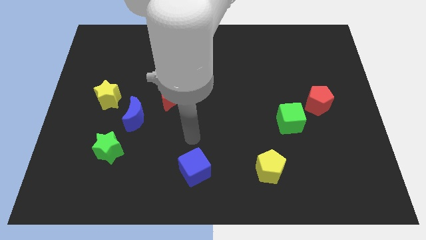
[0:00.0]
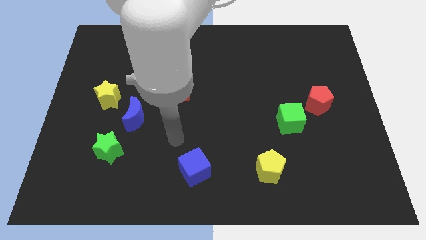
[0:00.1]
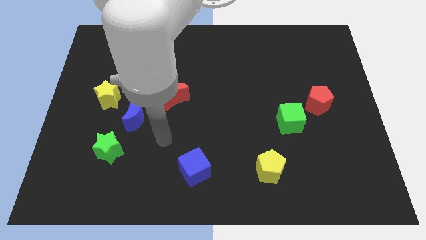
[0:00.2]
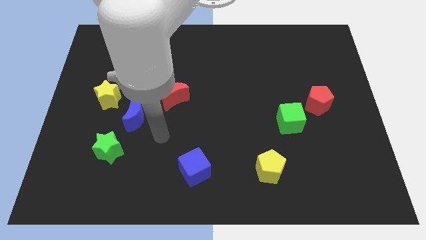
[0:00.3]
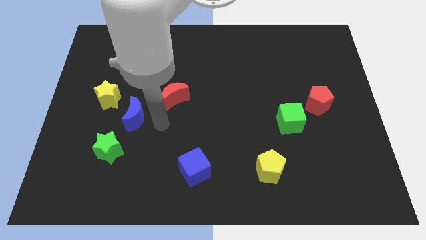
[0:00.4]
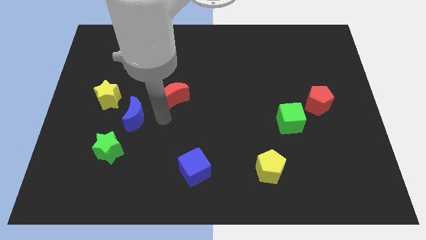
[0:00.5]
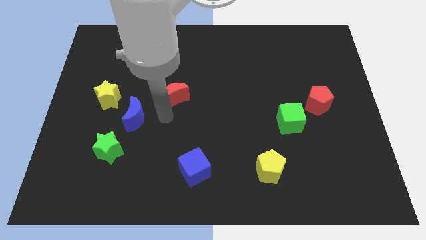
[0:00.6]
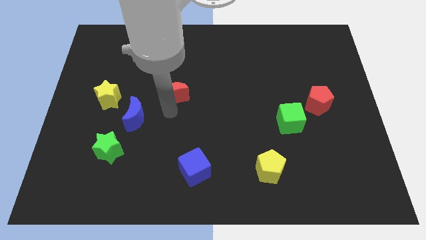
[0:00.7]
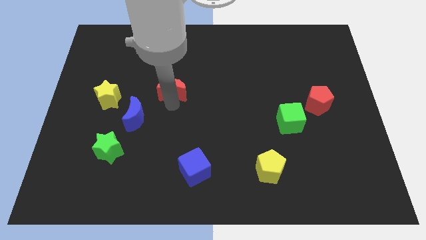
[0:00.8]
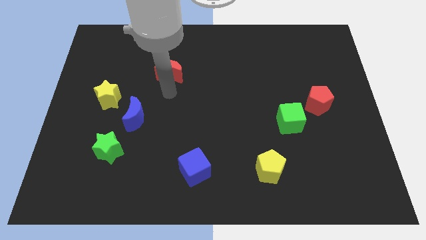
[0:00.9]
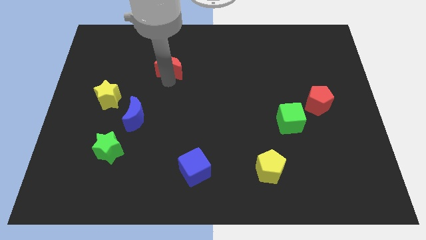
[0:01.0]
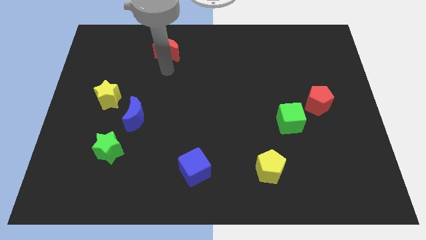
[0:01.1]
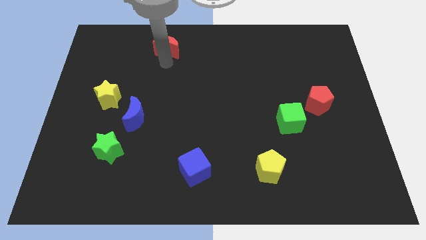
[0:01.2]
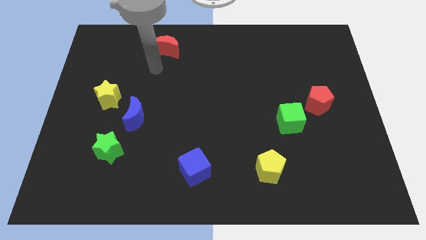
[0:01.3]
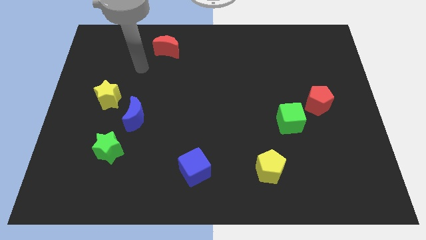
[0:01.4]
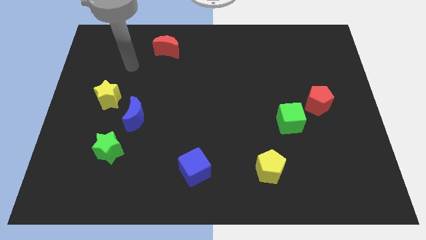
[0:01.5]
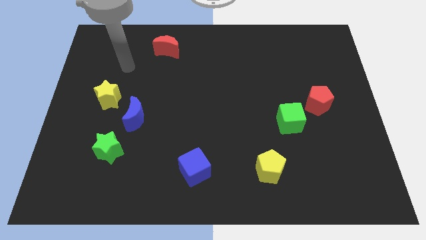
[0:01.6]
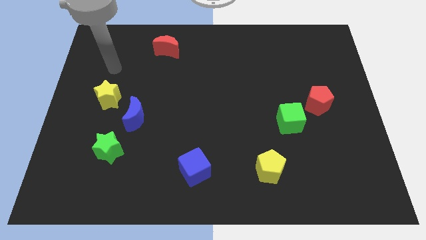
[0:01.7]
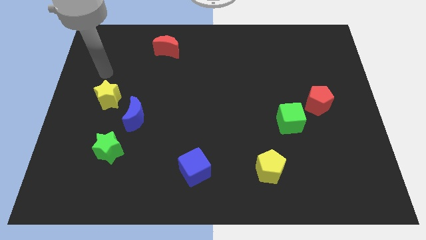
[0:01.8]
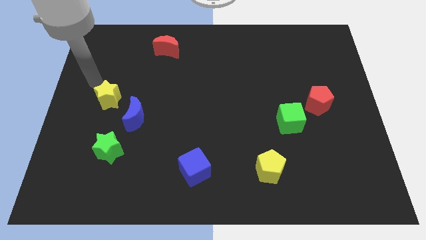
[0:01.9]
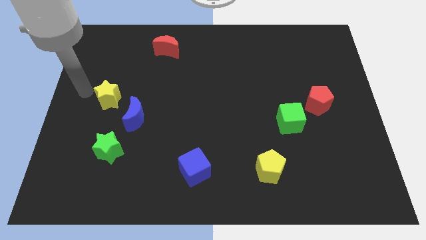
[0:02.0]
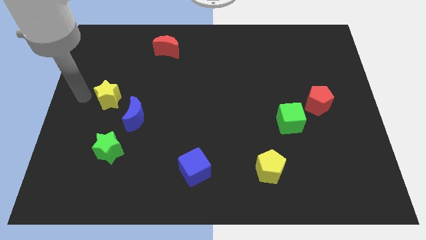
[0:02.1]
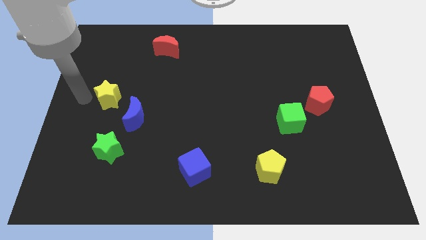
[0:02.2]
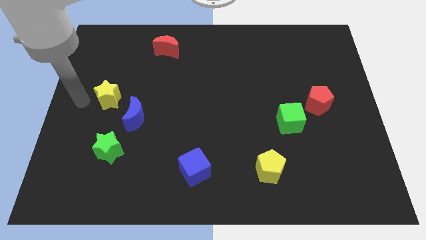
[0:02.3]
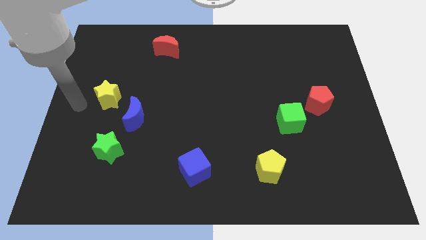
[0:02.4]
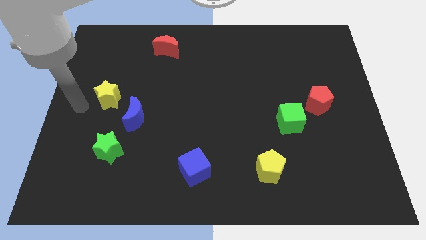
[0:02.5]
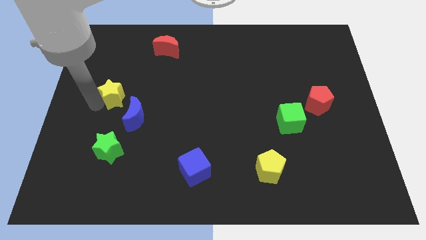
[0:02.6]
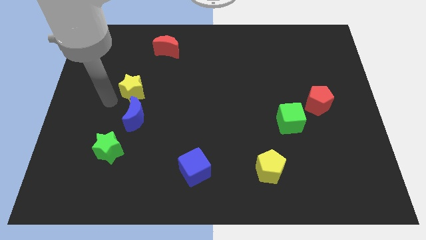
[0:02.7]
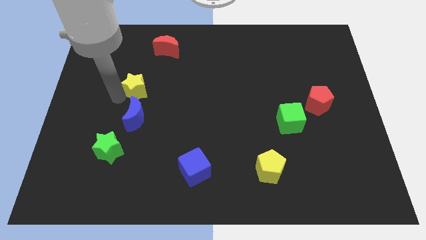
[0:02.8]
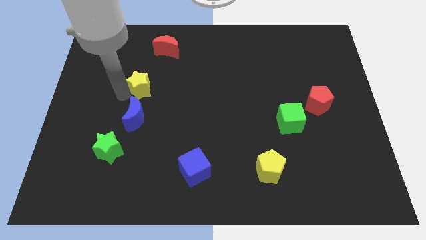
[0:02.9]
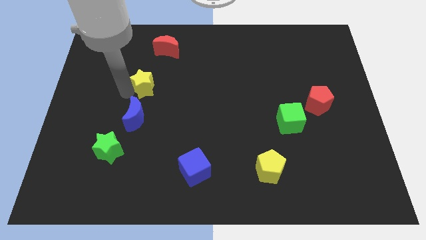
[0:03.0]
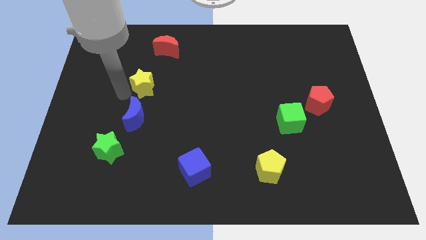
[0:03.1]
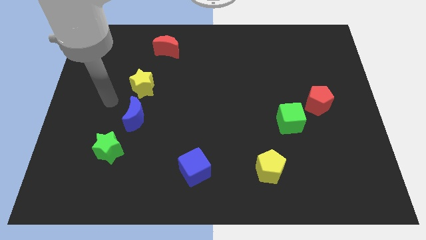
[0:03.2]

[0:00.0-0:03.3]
push the red moon and yellow star above blue moon

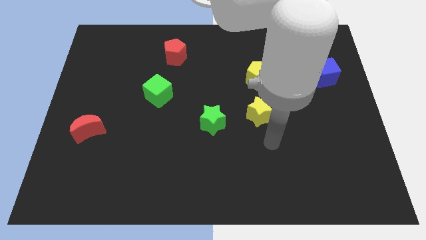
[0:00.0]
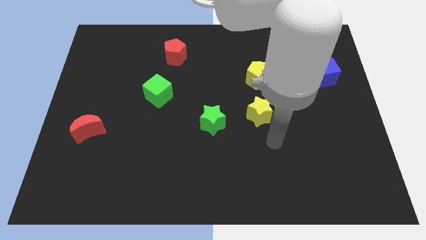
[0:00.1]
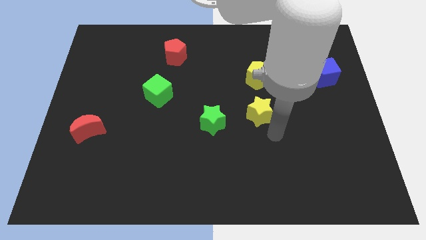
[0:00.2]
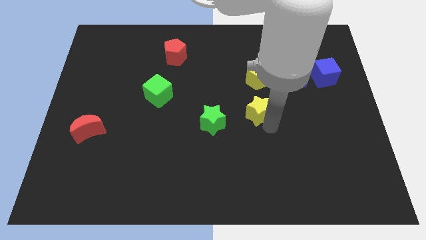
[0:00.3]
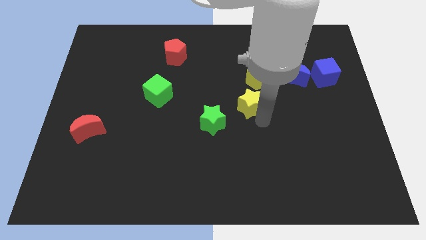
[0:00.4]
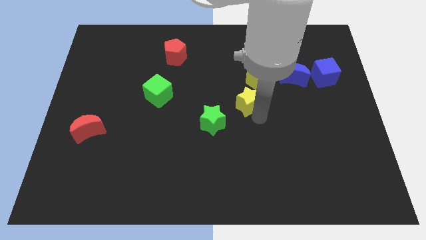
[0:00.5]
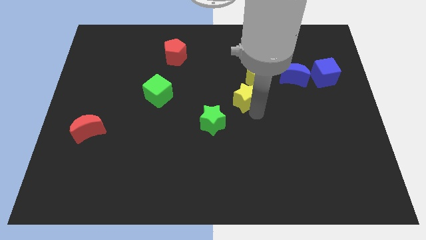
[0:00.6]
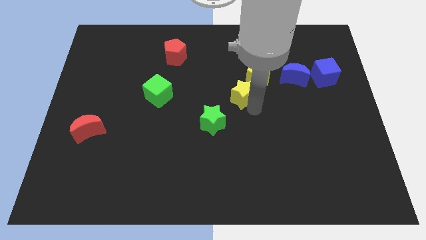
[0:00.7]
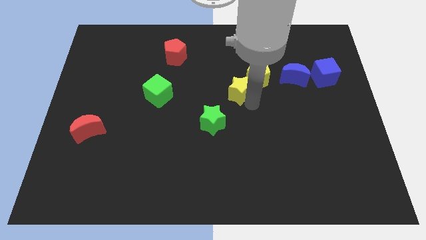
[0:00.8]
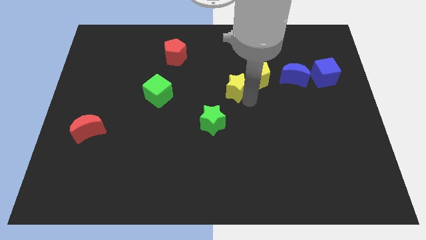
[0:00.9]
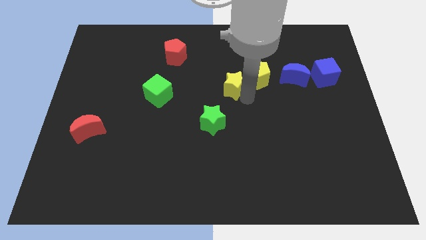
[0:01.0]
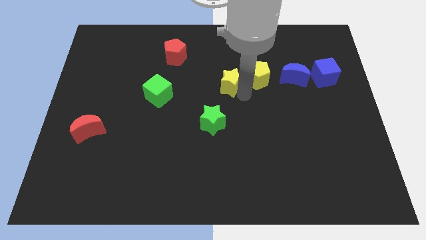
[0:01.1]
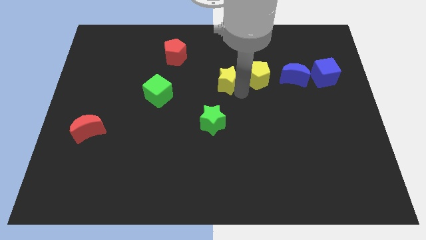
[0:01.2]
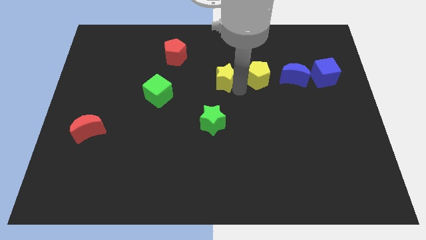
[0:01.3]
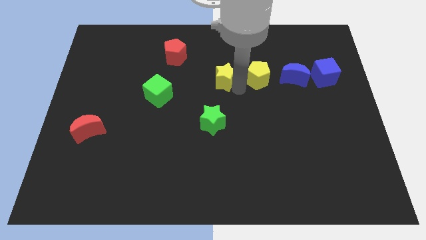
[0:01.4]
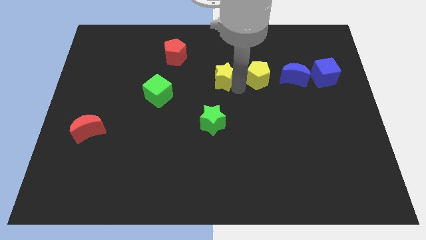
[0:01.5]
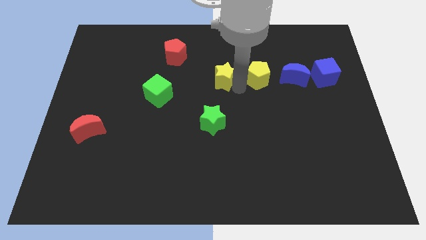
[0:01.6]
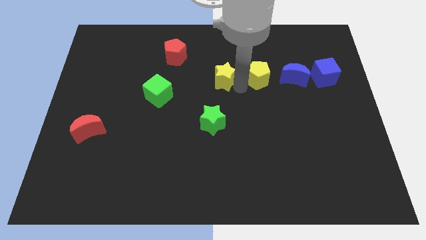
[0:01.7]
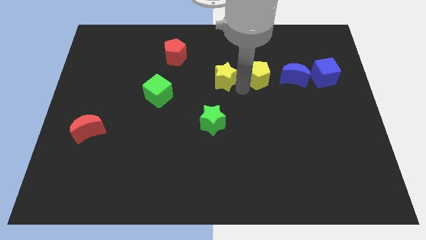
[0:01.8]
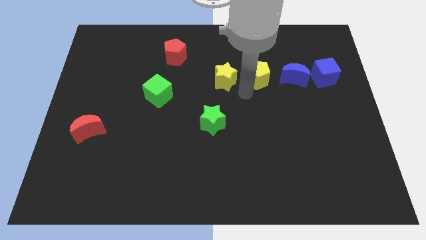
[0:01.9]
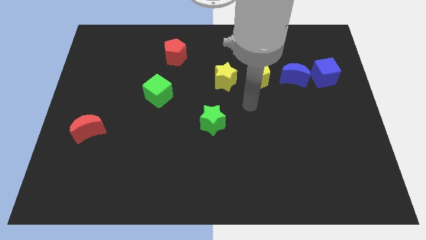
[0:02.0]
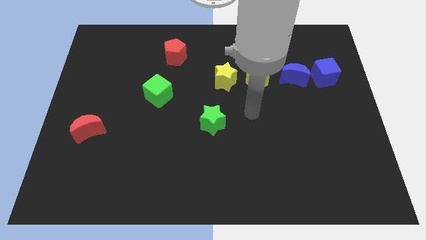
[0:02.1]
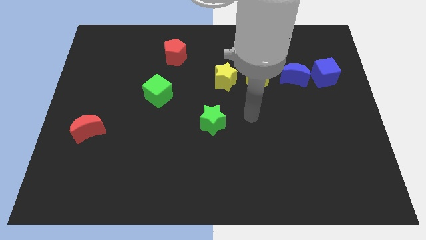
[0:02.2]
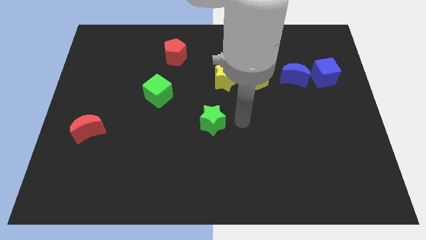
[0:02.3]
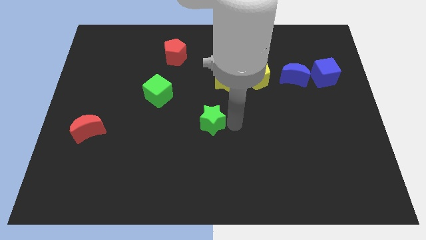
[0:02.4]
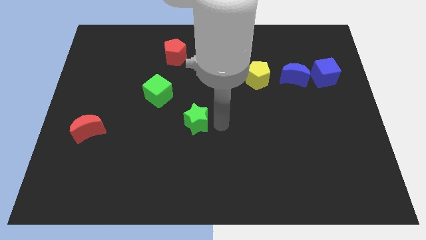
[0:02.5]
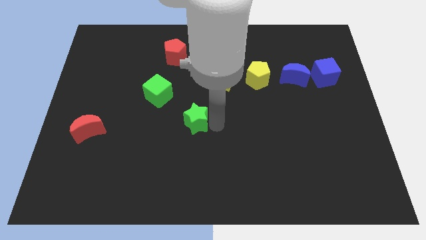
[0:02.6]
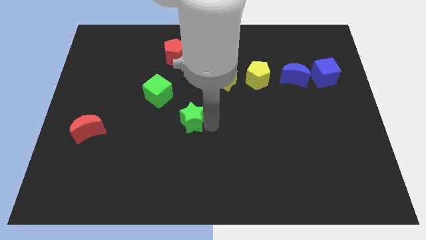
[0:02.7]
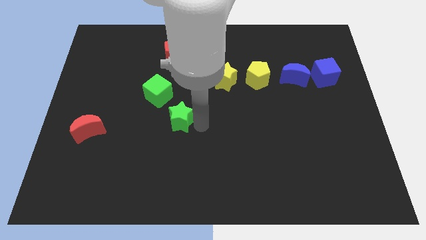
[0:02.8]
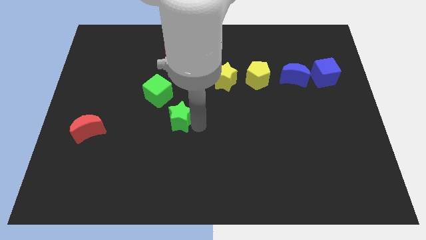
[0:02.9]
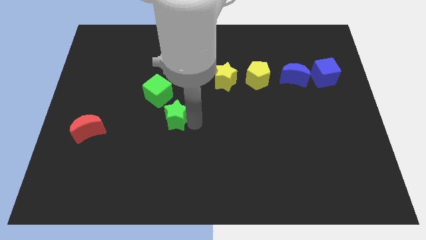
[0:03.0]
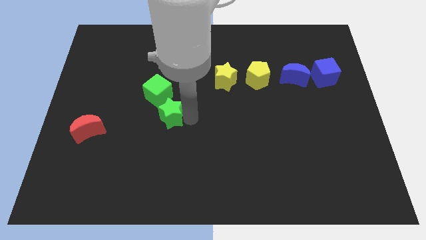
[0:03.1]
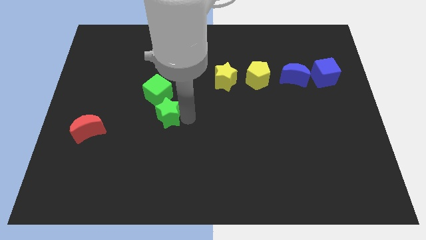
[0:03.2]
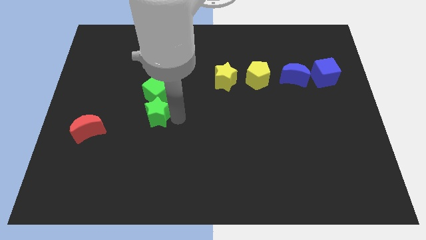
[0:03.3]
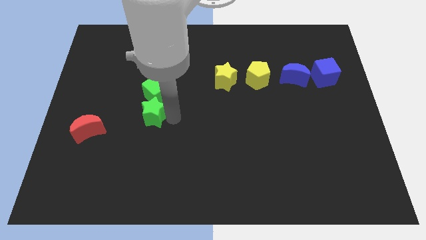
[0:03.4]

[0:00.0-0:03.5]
push green star below green cube

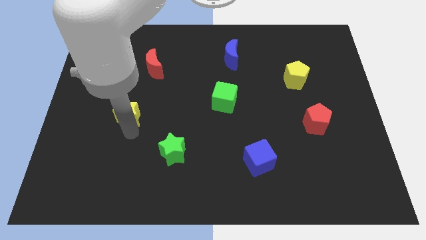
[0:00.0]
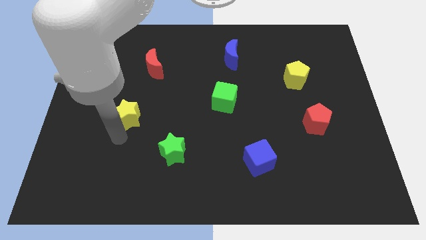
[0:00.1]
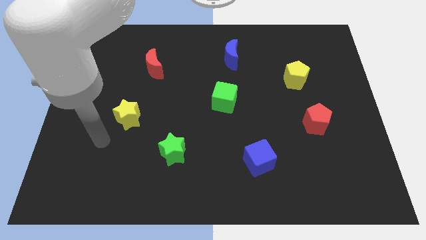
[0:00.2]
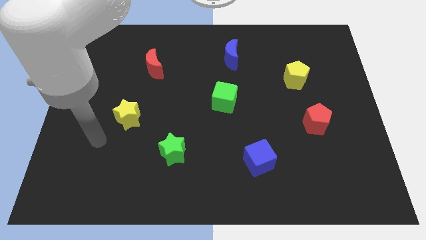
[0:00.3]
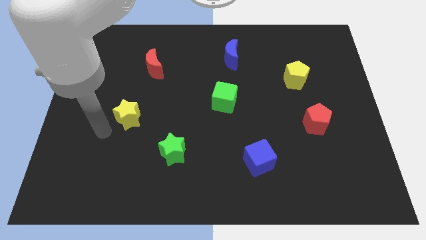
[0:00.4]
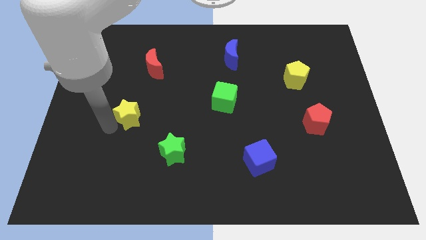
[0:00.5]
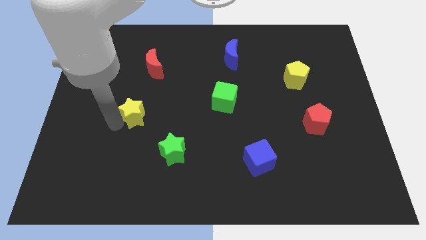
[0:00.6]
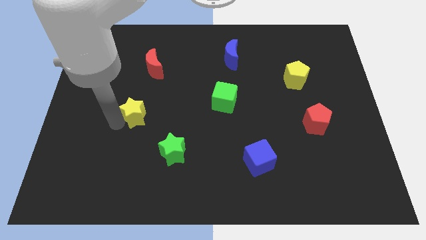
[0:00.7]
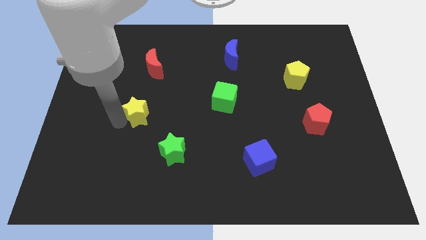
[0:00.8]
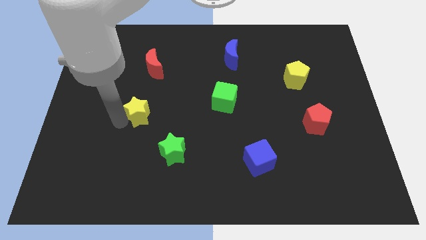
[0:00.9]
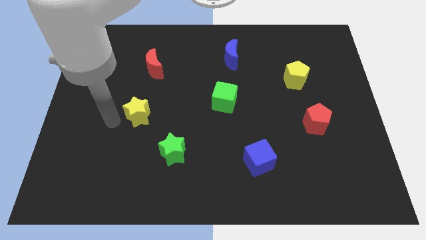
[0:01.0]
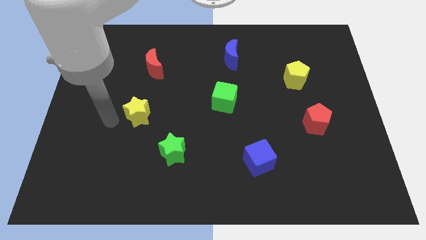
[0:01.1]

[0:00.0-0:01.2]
put your arm on the left side of the yellow star

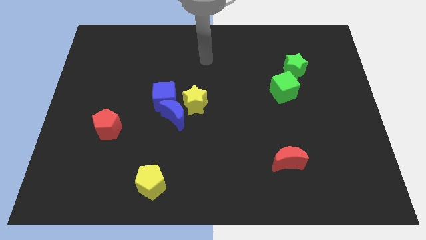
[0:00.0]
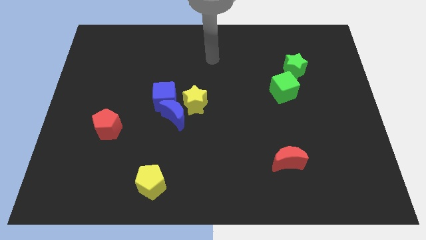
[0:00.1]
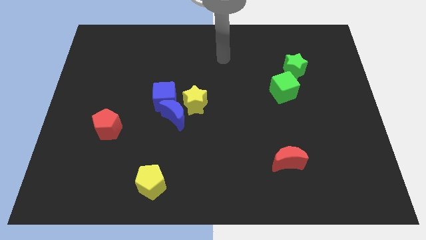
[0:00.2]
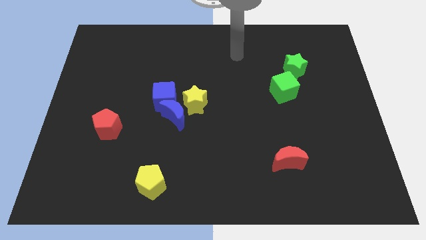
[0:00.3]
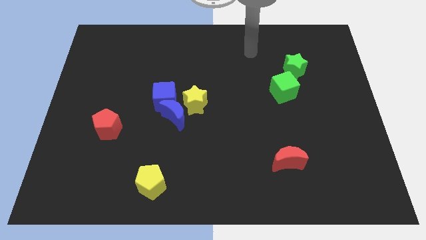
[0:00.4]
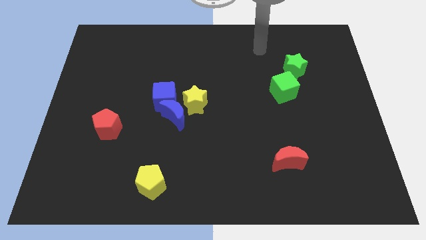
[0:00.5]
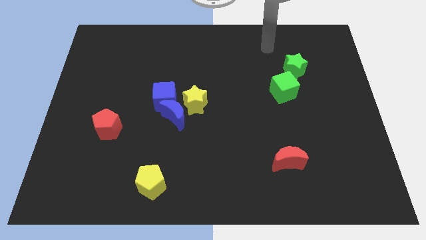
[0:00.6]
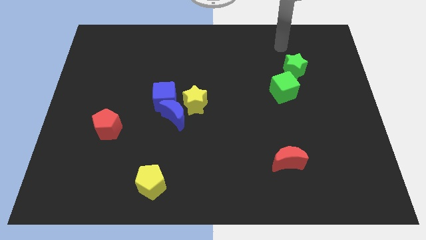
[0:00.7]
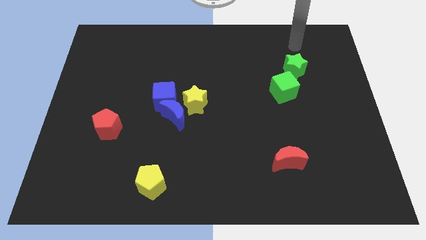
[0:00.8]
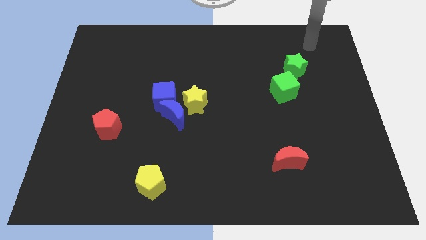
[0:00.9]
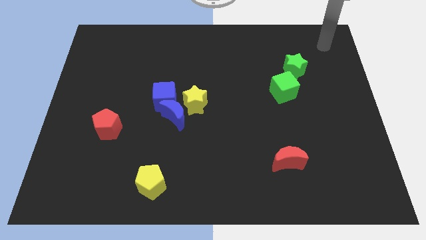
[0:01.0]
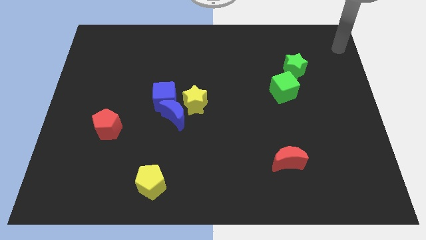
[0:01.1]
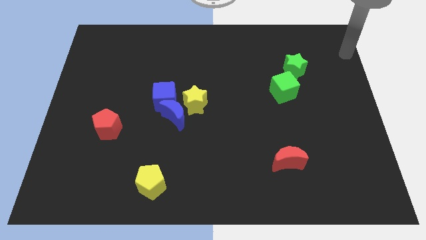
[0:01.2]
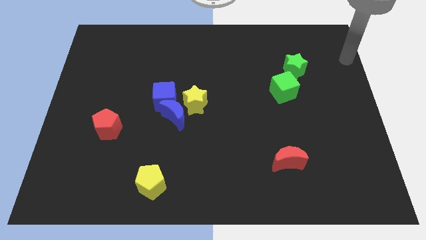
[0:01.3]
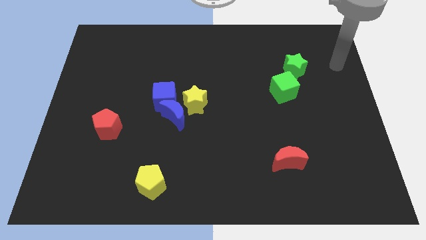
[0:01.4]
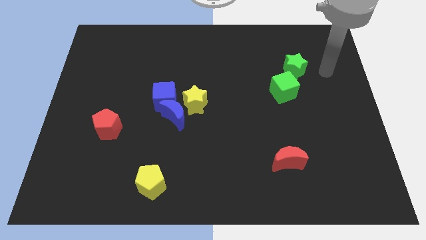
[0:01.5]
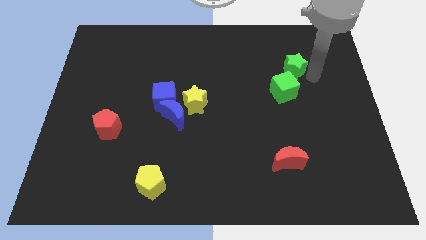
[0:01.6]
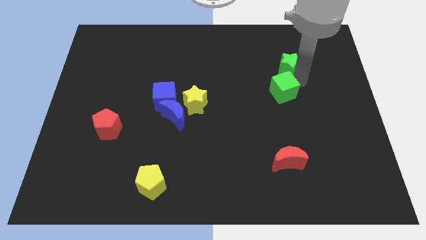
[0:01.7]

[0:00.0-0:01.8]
move your arm to the right of green star
